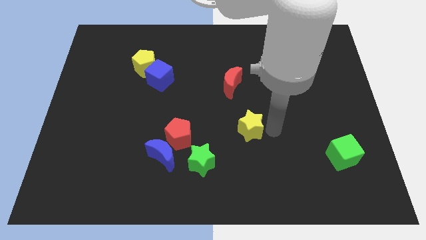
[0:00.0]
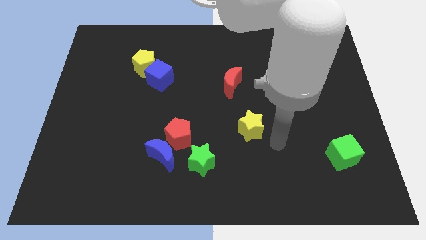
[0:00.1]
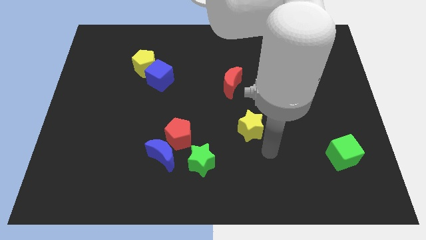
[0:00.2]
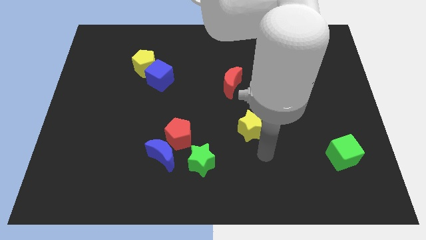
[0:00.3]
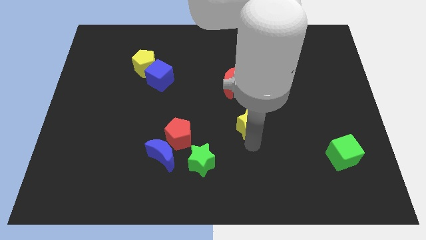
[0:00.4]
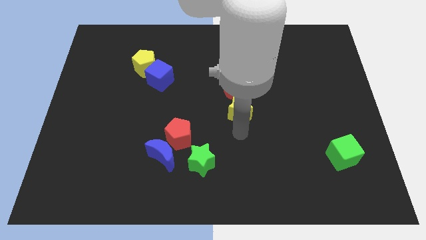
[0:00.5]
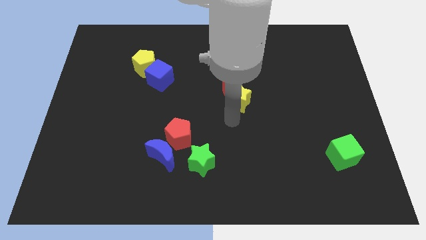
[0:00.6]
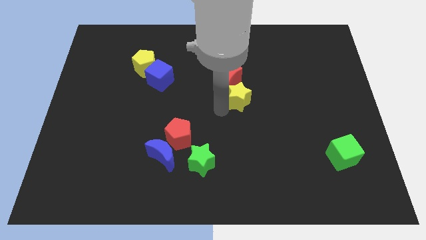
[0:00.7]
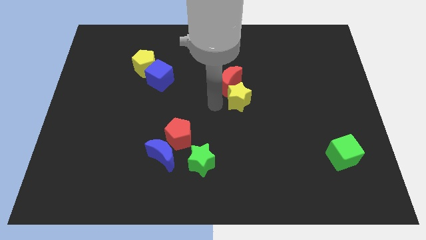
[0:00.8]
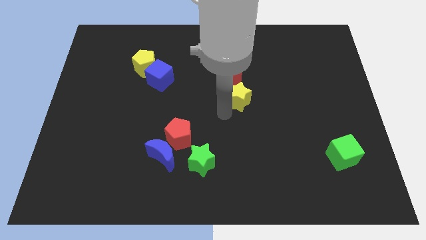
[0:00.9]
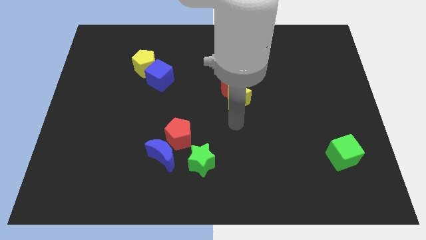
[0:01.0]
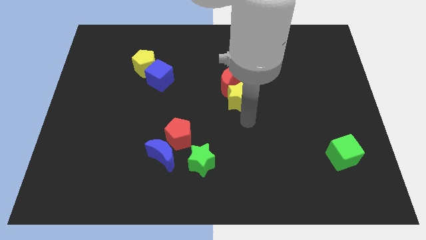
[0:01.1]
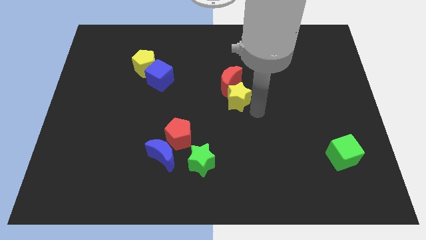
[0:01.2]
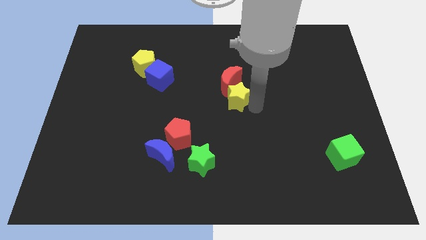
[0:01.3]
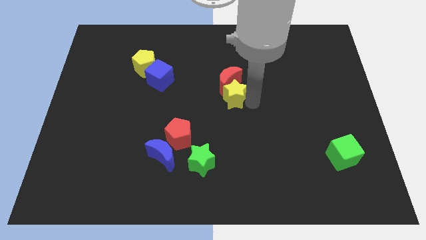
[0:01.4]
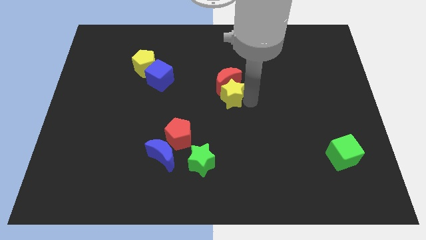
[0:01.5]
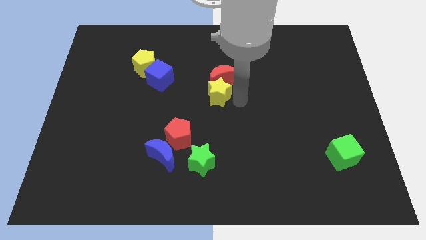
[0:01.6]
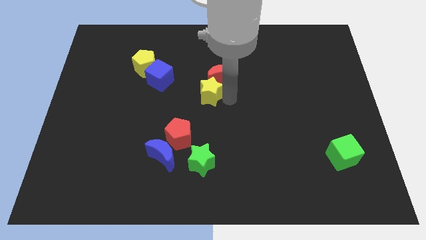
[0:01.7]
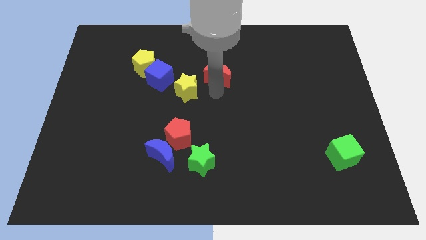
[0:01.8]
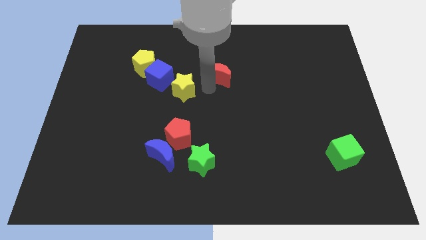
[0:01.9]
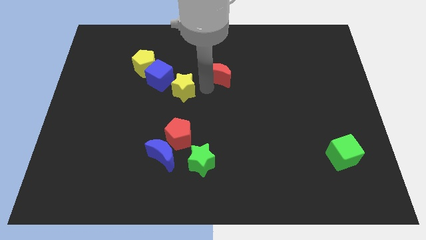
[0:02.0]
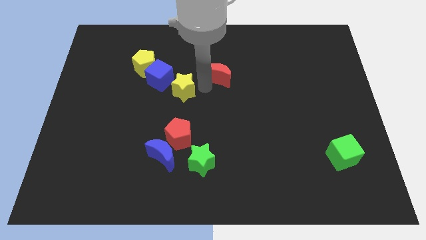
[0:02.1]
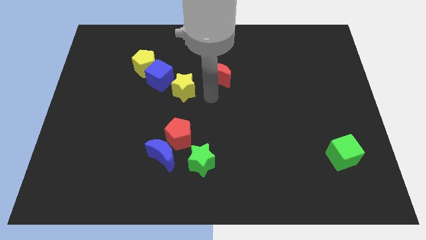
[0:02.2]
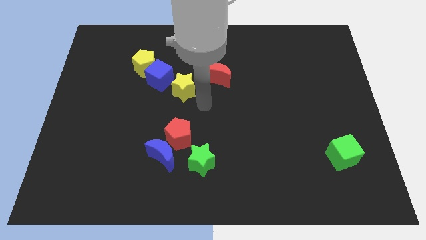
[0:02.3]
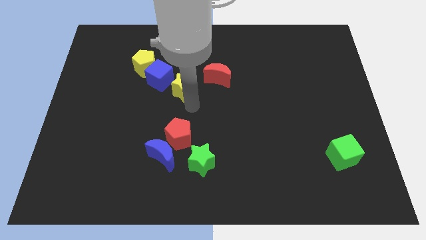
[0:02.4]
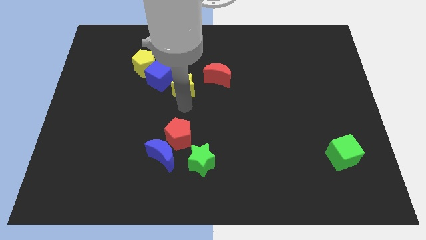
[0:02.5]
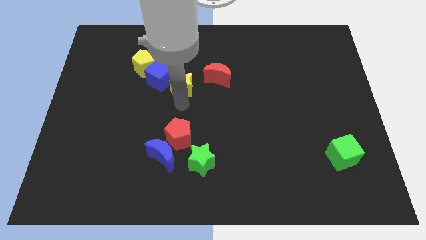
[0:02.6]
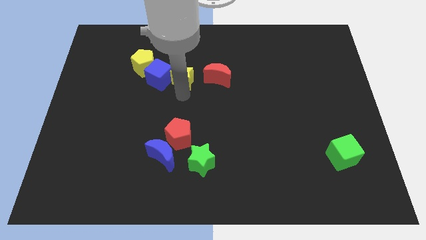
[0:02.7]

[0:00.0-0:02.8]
push yellow star in to blue cube

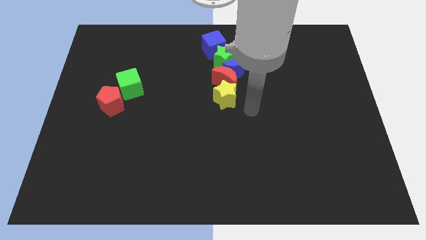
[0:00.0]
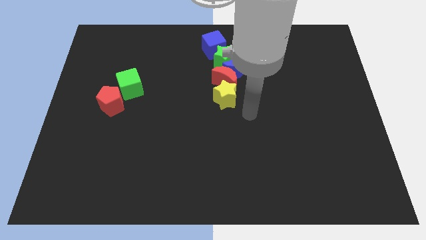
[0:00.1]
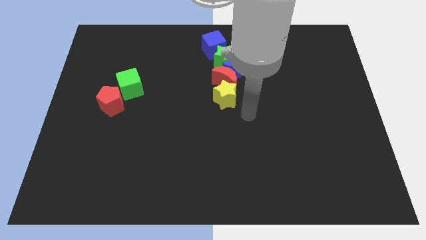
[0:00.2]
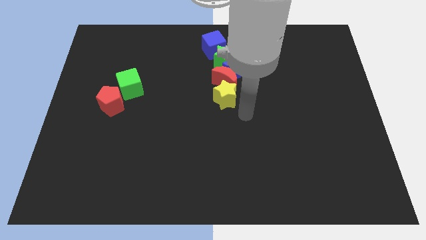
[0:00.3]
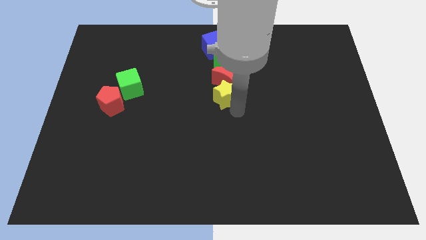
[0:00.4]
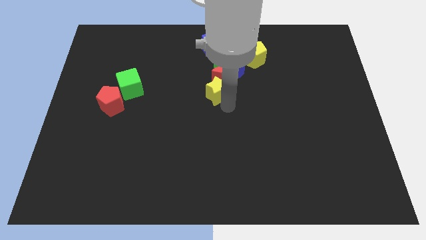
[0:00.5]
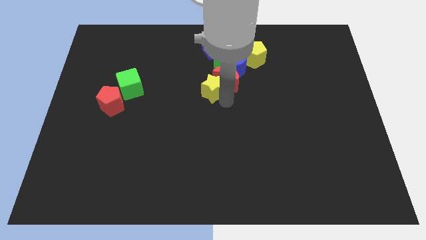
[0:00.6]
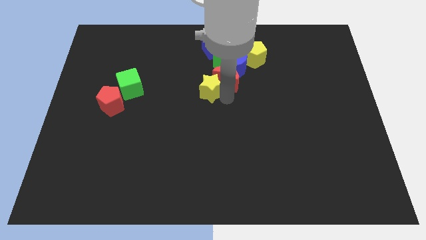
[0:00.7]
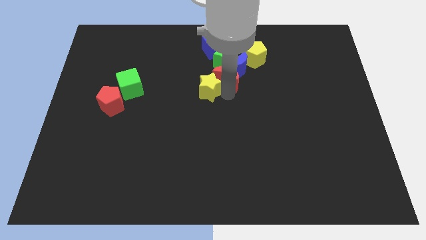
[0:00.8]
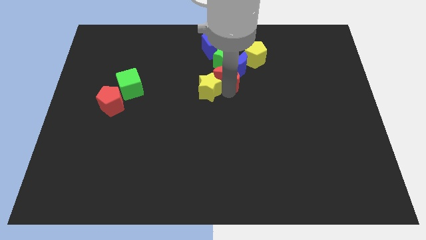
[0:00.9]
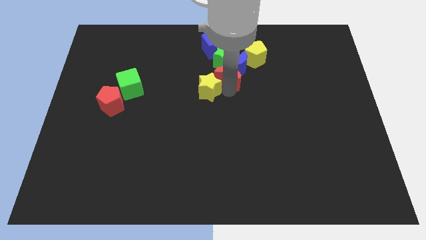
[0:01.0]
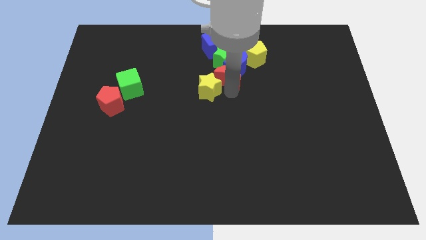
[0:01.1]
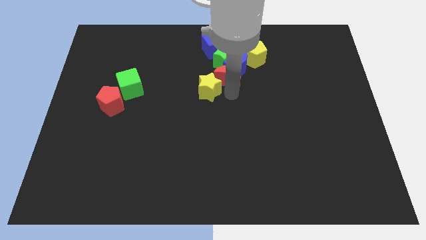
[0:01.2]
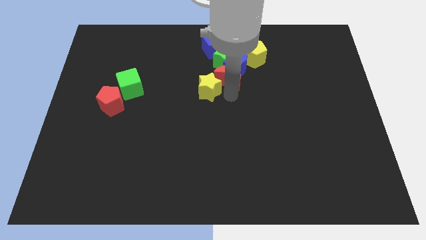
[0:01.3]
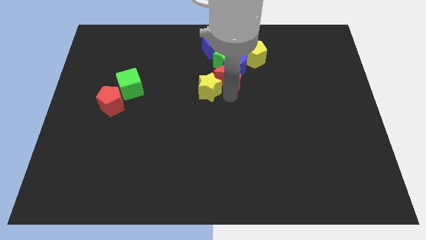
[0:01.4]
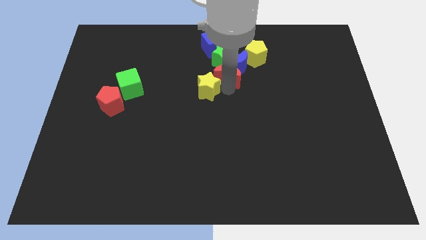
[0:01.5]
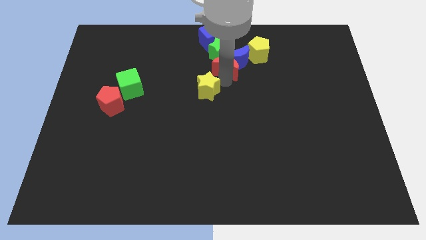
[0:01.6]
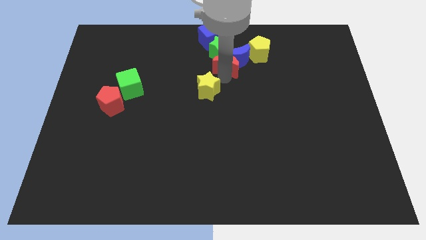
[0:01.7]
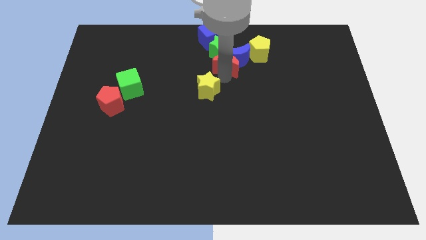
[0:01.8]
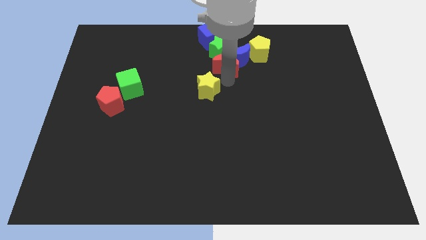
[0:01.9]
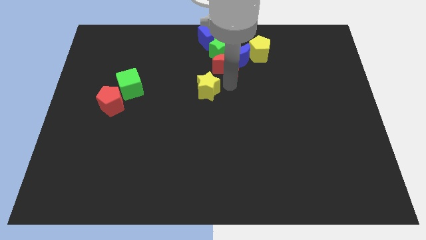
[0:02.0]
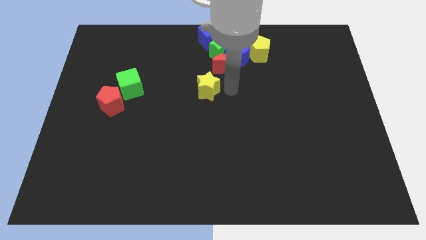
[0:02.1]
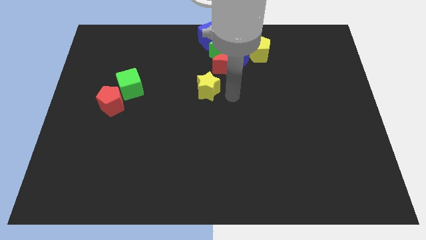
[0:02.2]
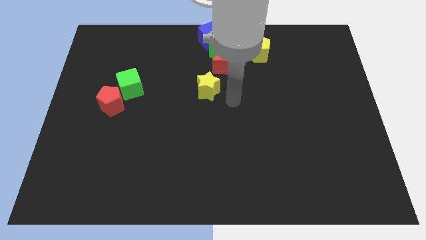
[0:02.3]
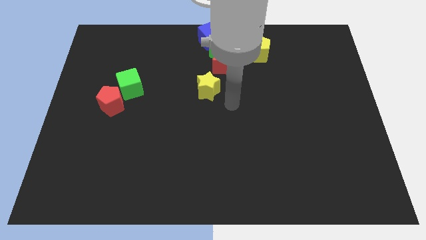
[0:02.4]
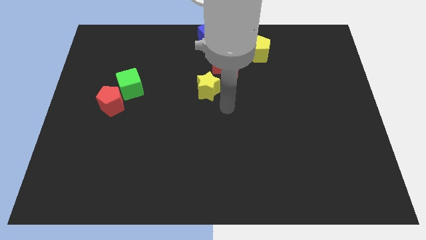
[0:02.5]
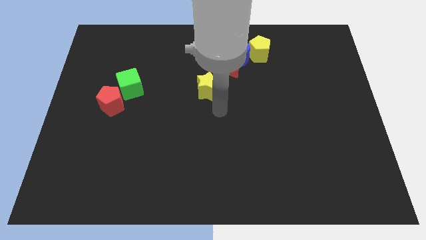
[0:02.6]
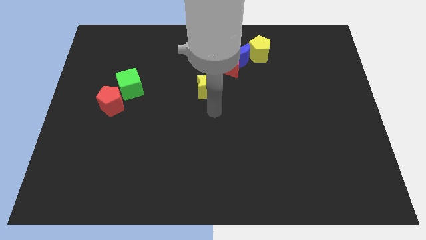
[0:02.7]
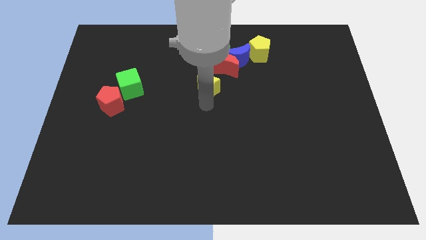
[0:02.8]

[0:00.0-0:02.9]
move the red moon away from the yellow star

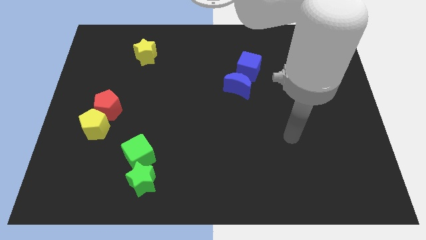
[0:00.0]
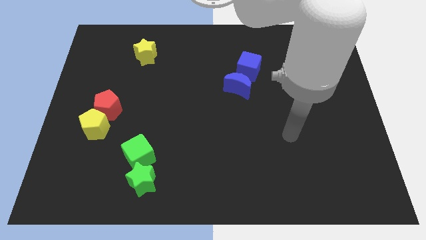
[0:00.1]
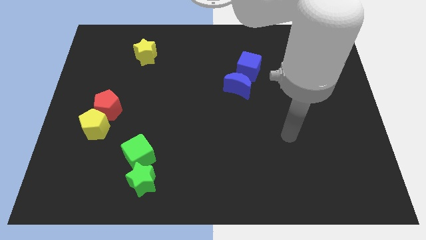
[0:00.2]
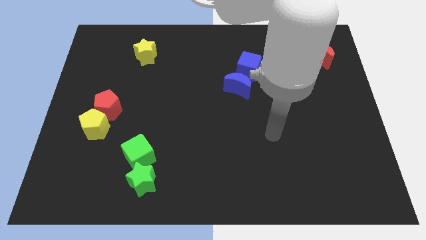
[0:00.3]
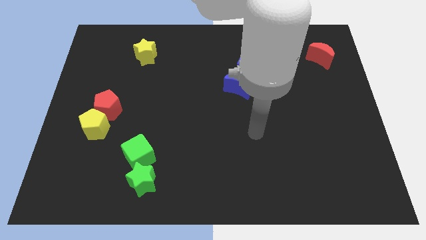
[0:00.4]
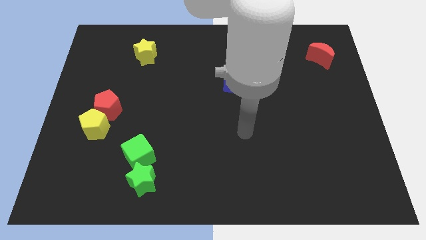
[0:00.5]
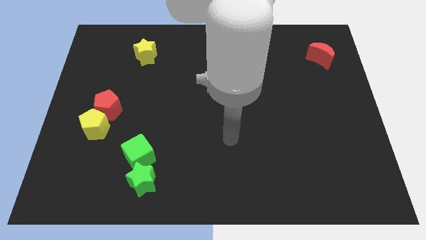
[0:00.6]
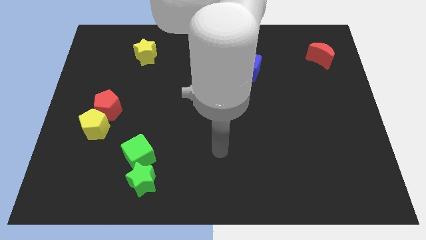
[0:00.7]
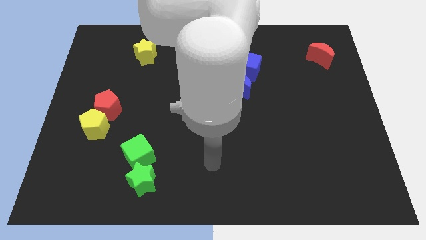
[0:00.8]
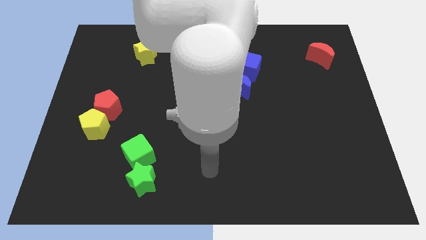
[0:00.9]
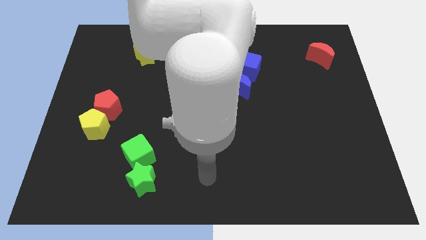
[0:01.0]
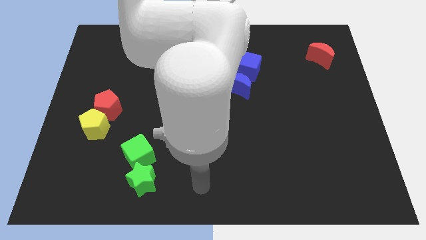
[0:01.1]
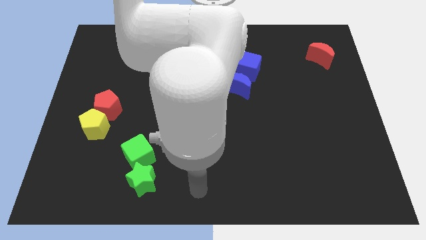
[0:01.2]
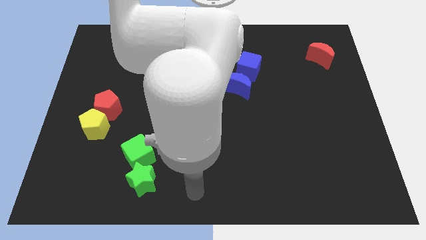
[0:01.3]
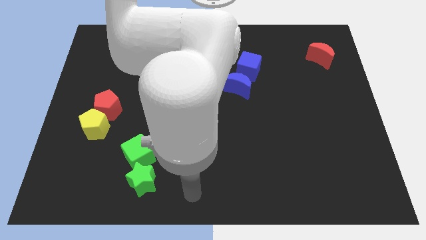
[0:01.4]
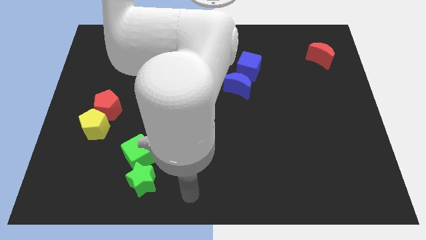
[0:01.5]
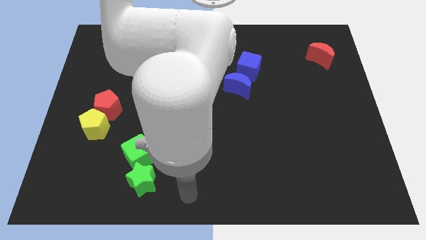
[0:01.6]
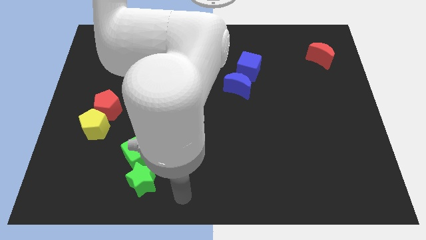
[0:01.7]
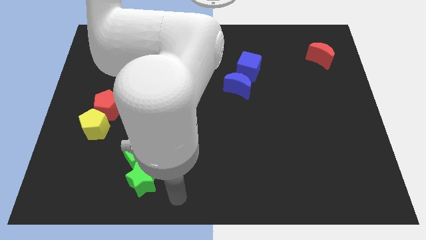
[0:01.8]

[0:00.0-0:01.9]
point your arm at the bottom towards green star

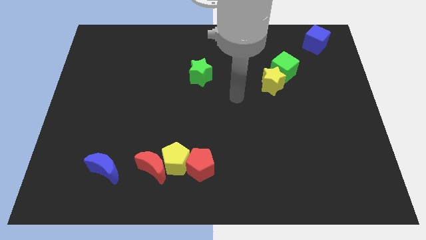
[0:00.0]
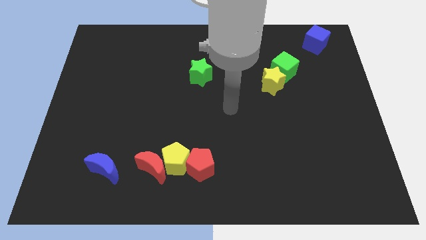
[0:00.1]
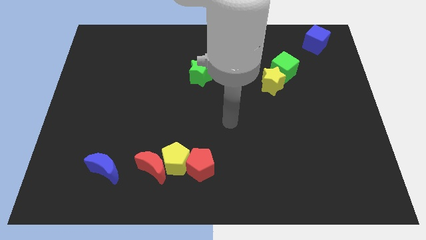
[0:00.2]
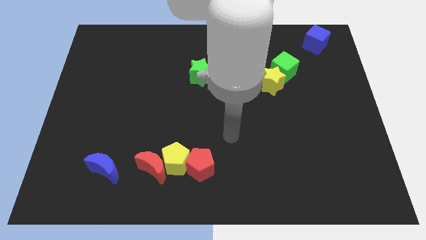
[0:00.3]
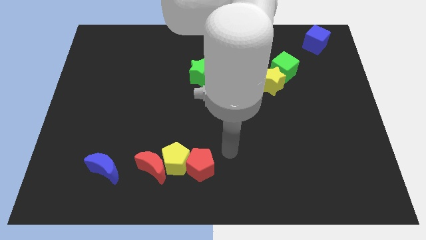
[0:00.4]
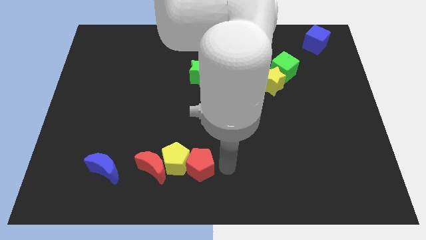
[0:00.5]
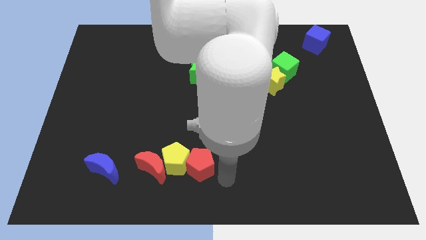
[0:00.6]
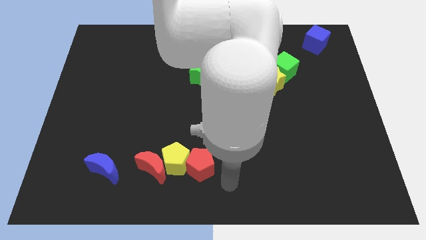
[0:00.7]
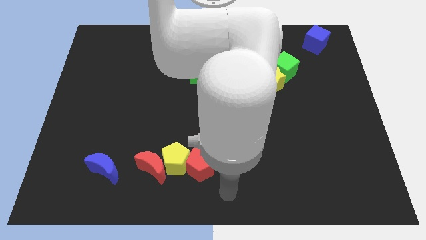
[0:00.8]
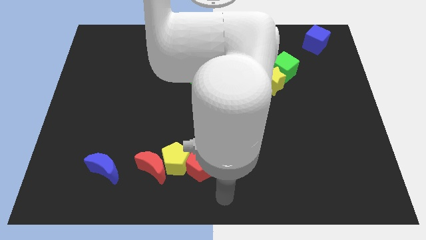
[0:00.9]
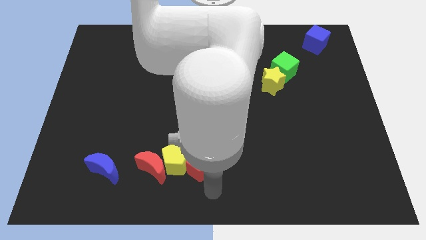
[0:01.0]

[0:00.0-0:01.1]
move the arm straight to the down

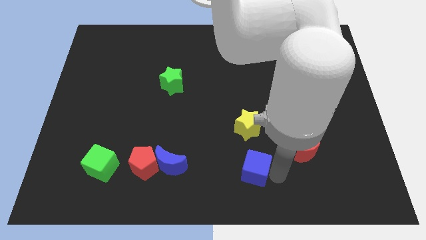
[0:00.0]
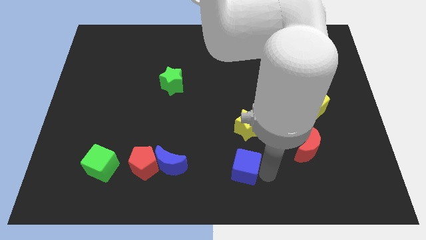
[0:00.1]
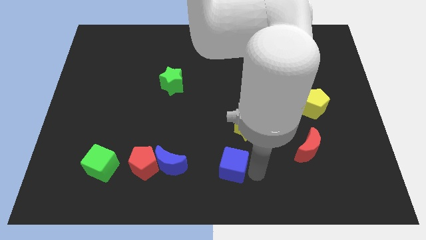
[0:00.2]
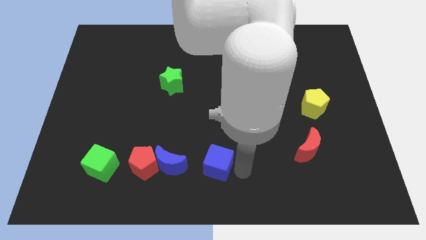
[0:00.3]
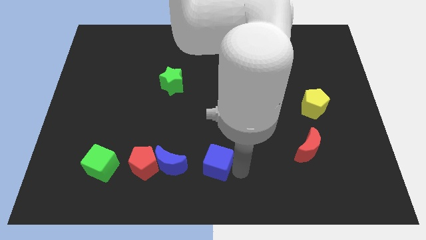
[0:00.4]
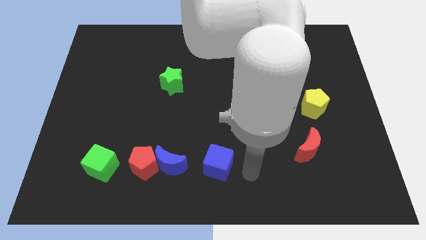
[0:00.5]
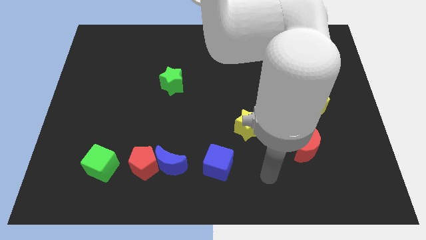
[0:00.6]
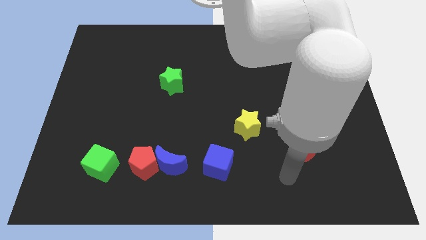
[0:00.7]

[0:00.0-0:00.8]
push blue cube towards blue crescent
